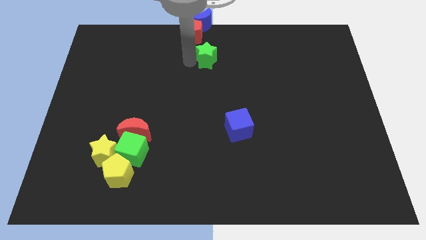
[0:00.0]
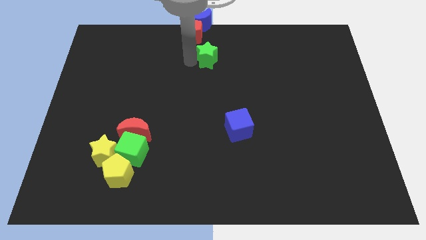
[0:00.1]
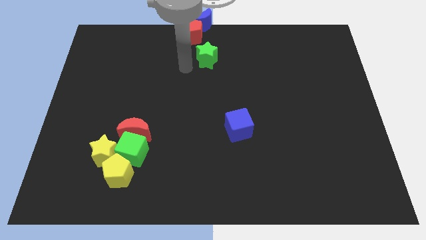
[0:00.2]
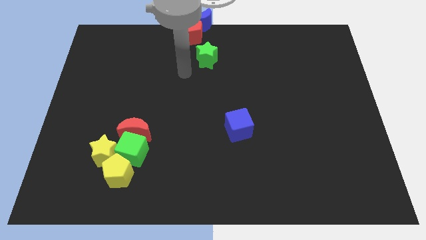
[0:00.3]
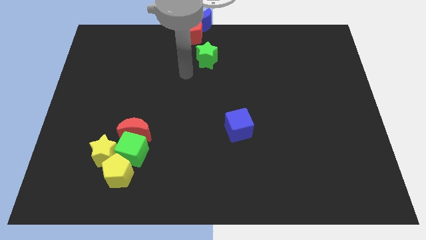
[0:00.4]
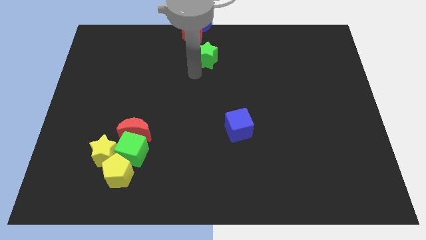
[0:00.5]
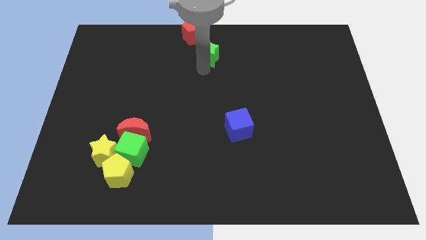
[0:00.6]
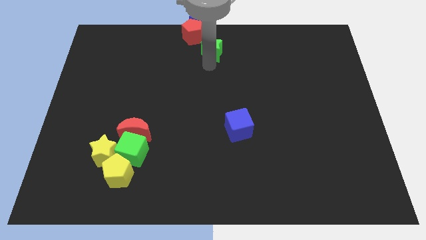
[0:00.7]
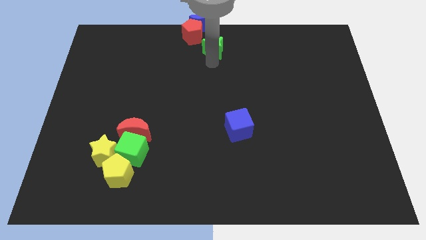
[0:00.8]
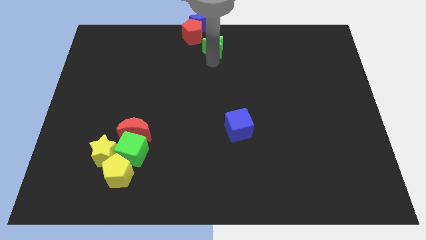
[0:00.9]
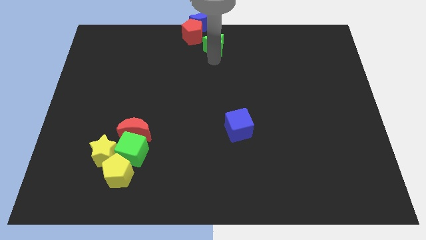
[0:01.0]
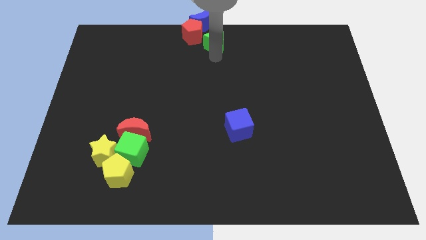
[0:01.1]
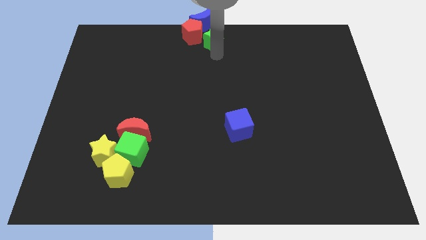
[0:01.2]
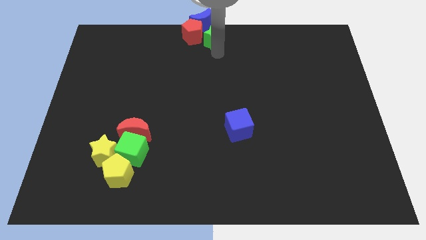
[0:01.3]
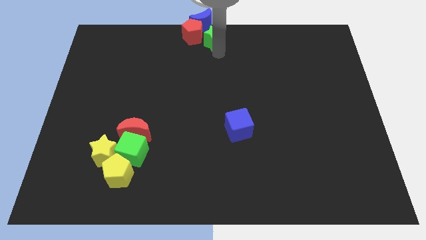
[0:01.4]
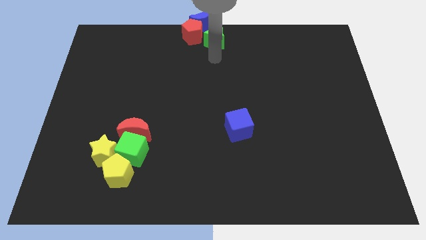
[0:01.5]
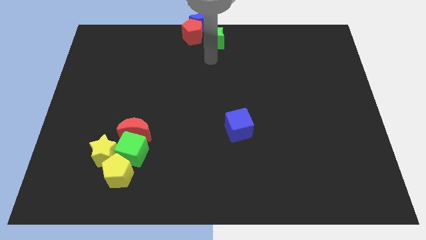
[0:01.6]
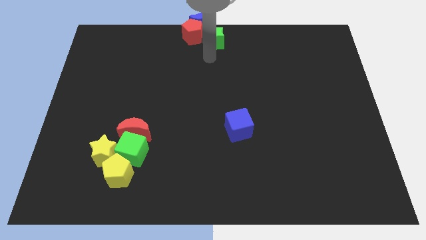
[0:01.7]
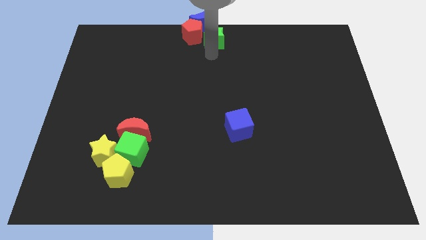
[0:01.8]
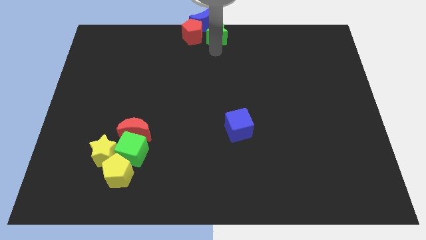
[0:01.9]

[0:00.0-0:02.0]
put the green star parallel right to the red pentagon

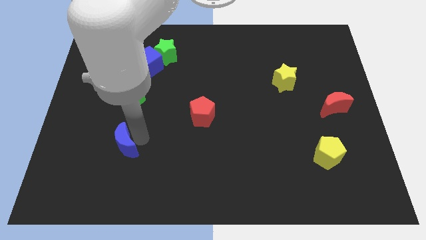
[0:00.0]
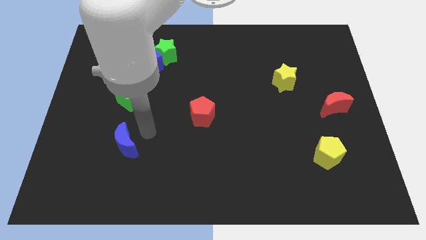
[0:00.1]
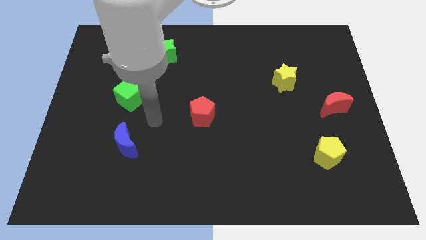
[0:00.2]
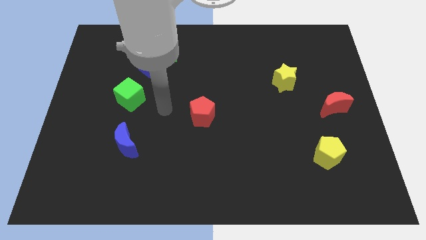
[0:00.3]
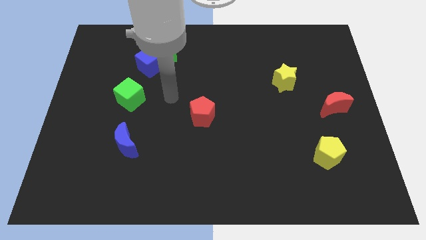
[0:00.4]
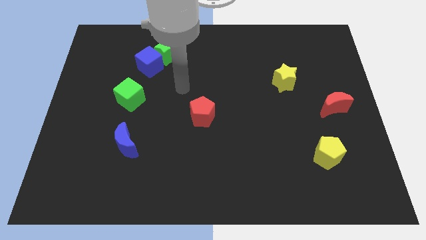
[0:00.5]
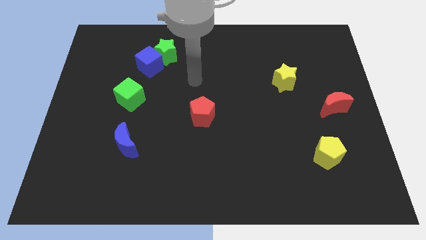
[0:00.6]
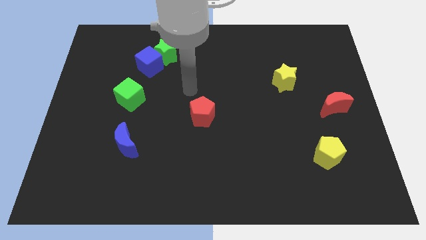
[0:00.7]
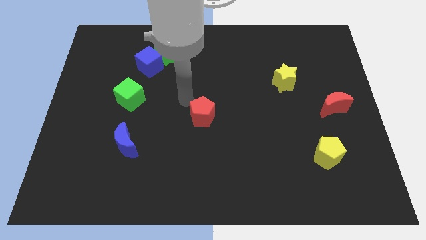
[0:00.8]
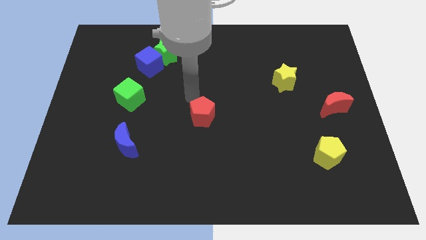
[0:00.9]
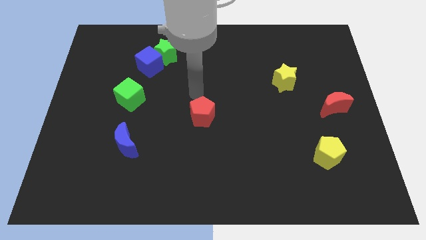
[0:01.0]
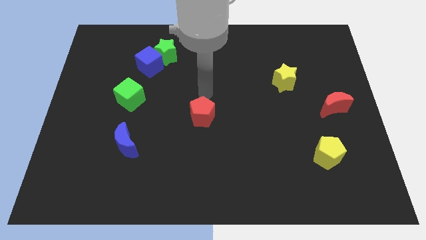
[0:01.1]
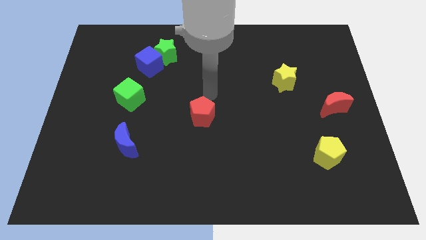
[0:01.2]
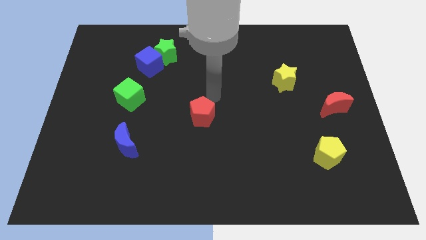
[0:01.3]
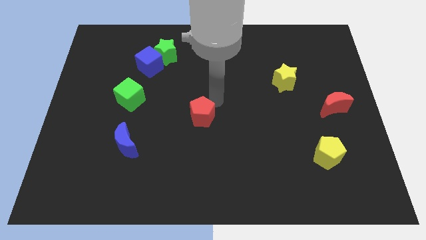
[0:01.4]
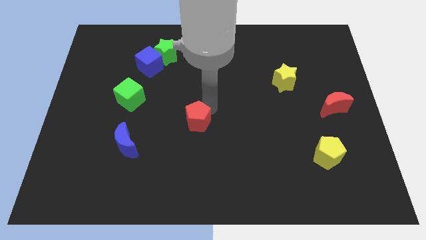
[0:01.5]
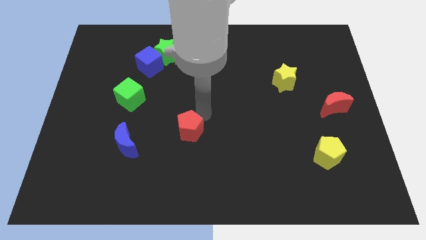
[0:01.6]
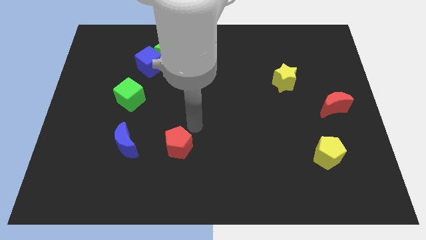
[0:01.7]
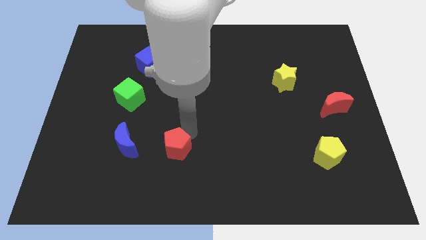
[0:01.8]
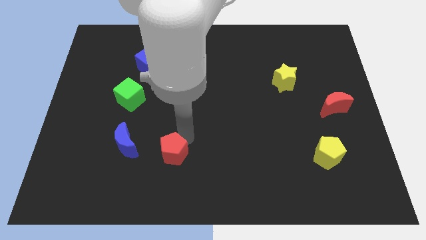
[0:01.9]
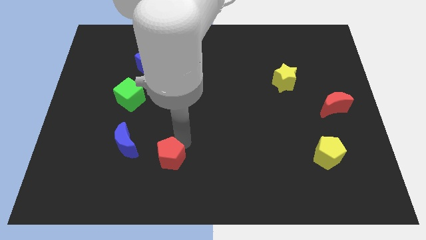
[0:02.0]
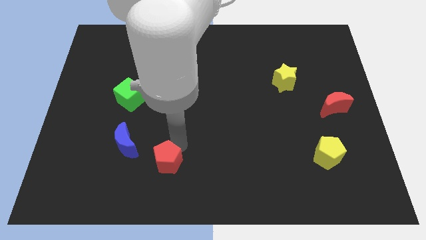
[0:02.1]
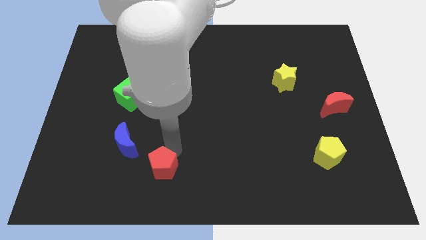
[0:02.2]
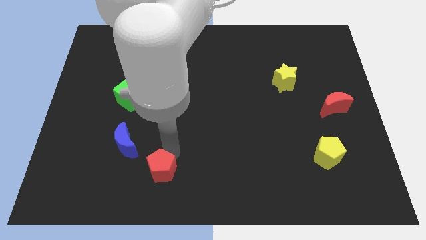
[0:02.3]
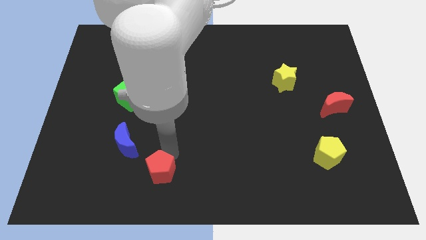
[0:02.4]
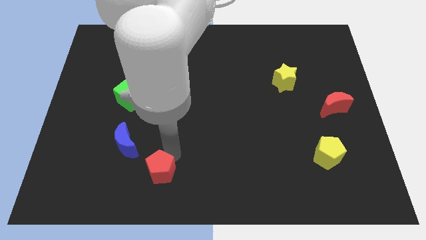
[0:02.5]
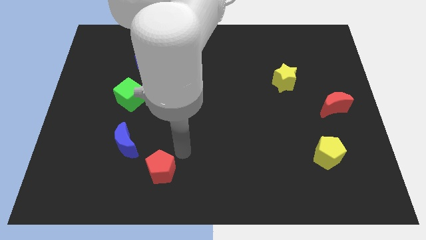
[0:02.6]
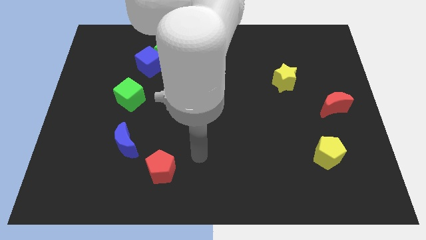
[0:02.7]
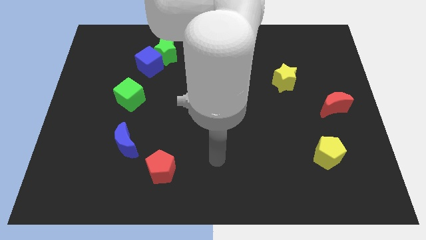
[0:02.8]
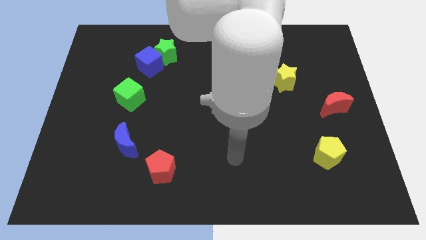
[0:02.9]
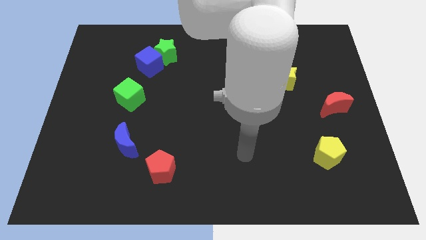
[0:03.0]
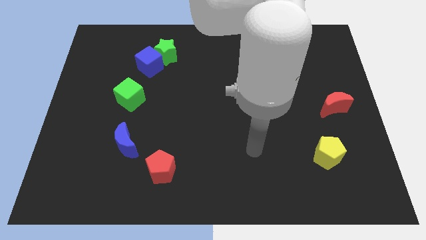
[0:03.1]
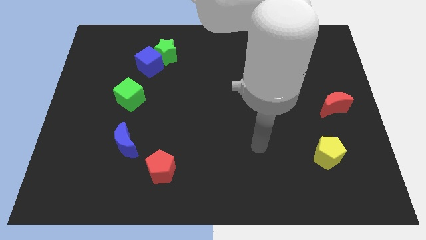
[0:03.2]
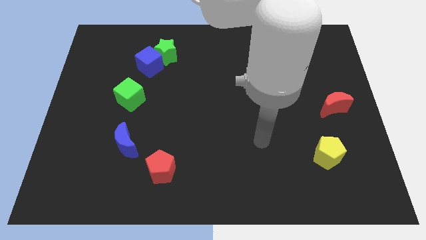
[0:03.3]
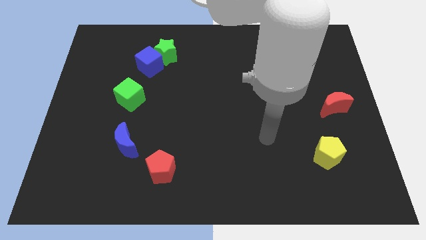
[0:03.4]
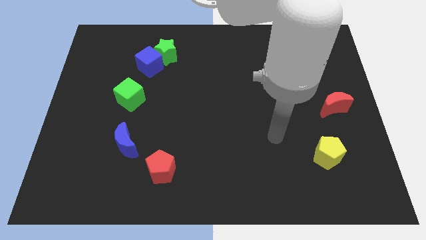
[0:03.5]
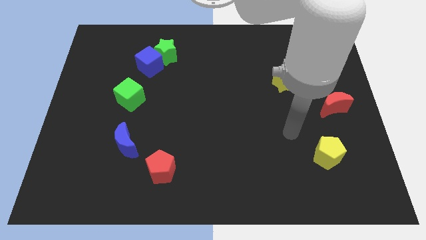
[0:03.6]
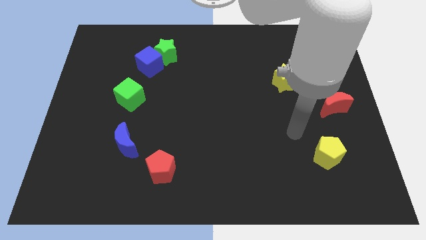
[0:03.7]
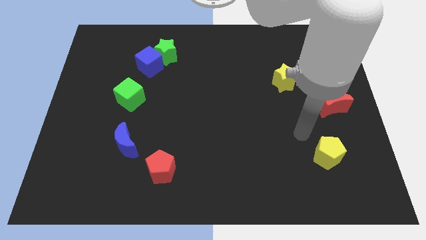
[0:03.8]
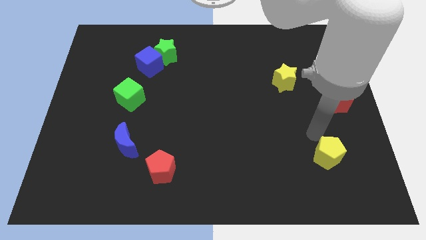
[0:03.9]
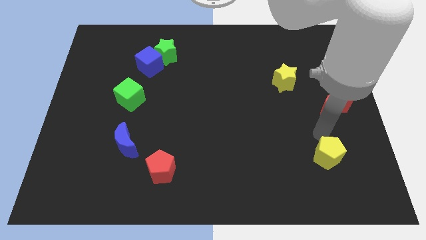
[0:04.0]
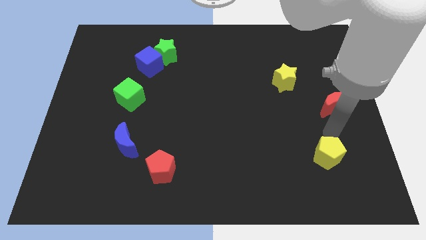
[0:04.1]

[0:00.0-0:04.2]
push the red pentagon towards bottom

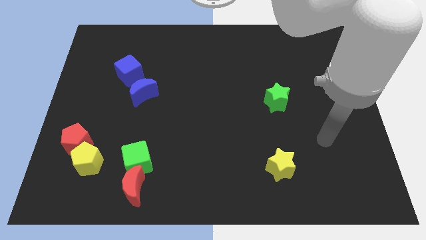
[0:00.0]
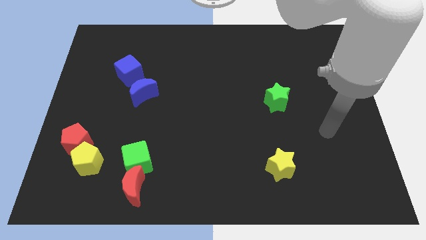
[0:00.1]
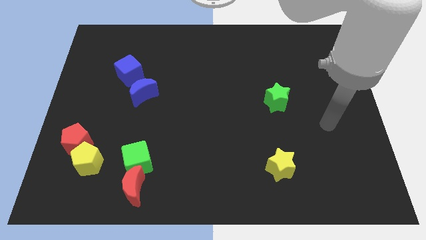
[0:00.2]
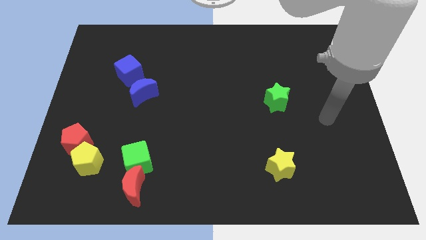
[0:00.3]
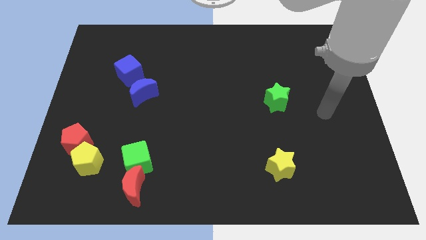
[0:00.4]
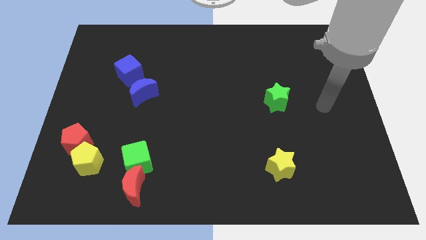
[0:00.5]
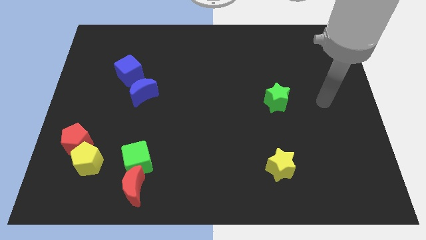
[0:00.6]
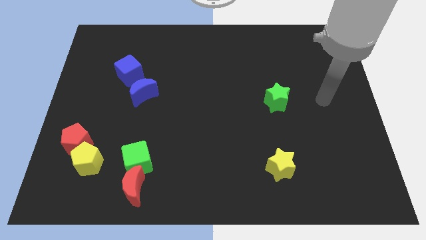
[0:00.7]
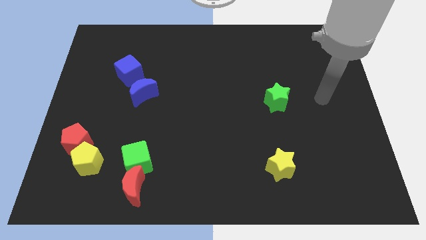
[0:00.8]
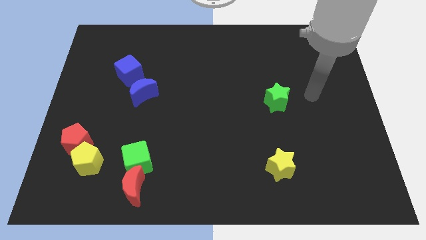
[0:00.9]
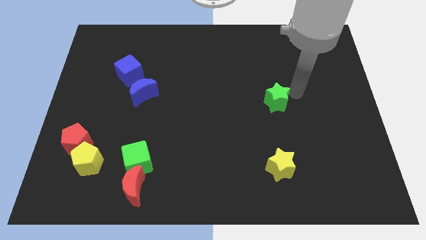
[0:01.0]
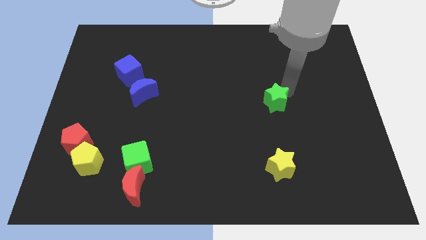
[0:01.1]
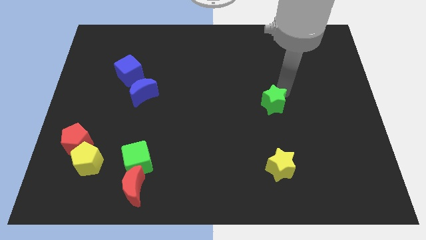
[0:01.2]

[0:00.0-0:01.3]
place arm on the top of green star

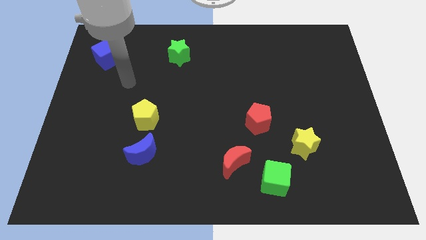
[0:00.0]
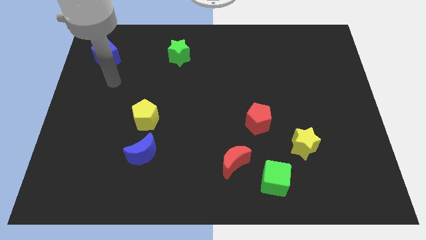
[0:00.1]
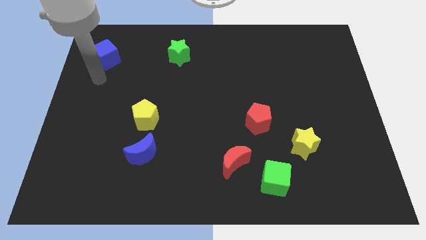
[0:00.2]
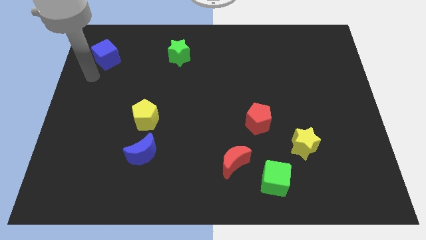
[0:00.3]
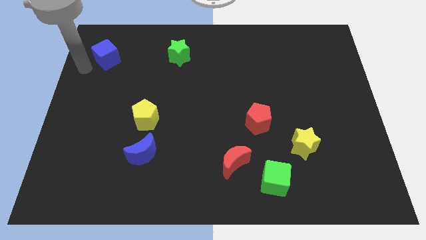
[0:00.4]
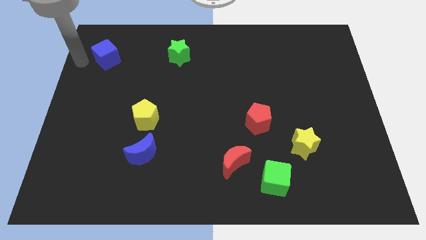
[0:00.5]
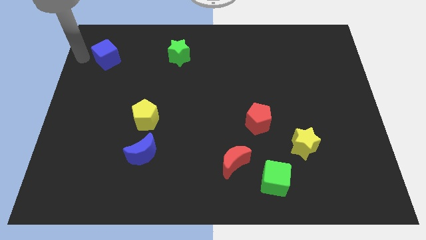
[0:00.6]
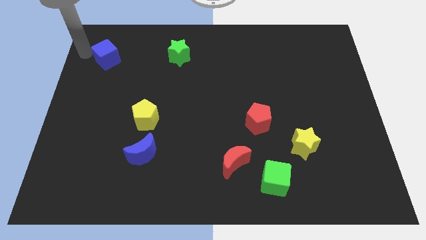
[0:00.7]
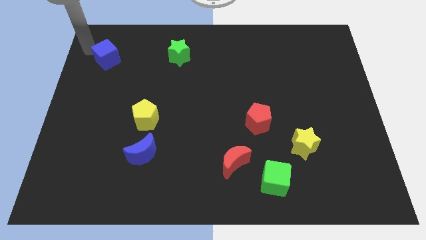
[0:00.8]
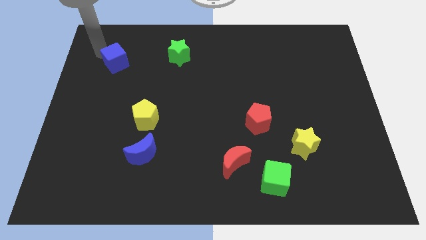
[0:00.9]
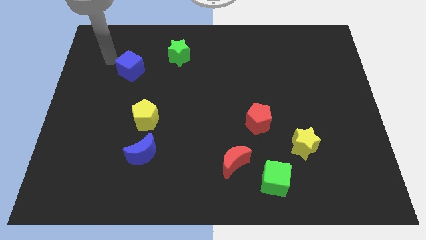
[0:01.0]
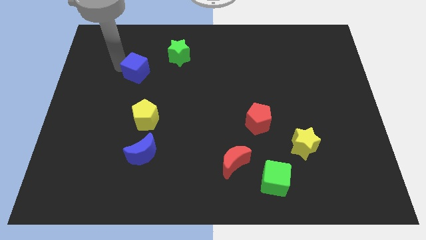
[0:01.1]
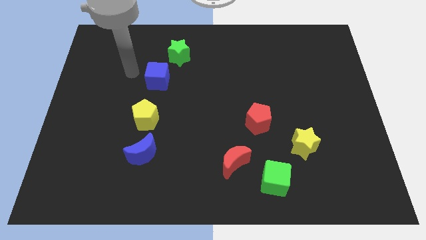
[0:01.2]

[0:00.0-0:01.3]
slide the blue cube vertically above the yellow pentagon

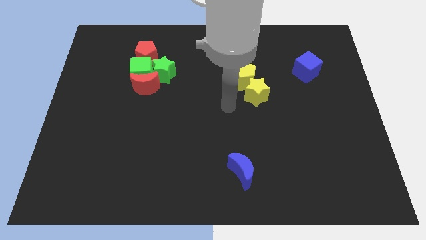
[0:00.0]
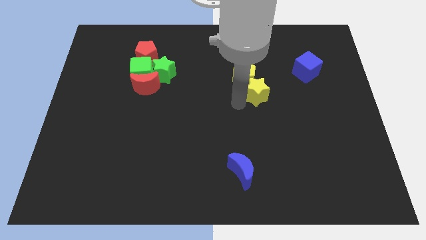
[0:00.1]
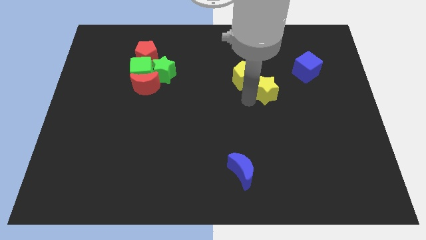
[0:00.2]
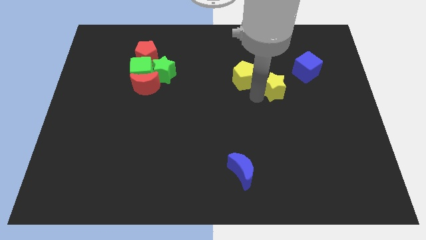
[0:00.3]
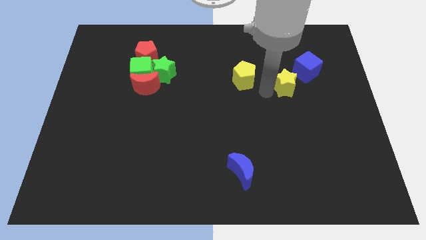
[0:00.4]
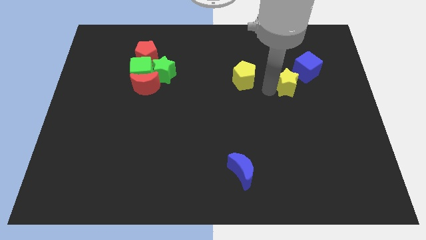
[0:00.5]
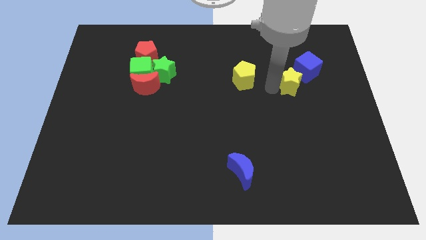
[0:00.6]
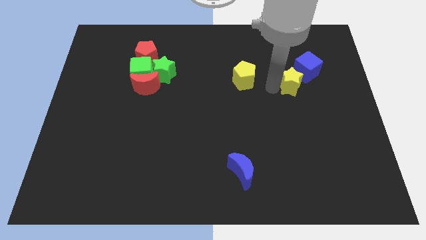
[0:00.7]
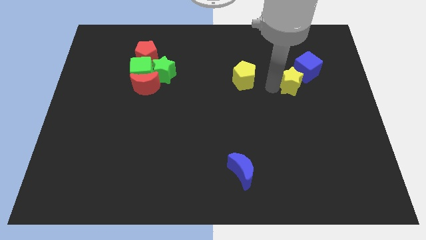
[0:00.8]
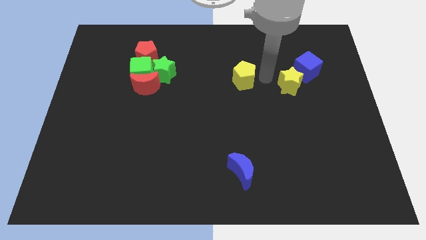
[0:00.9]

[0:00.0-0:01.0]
push the blue cube diagonally top right to the yellow star
